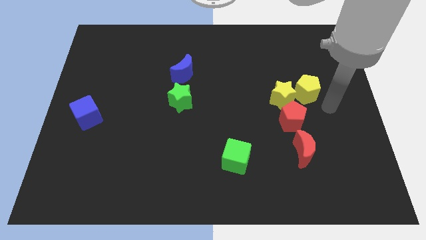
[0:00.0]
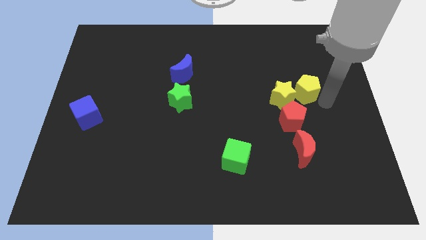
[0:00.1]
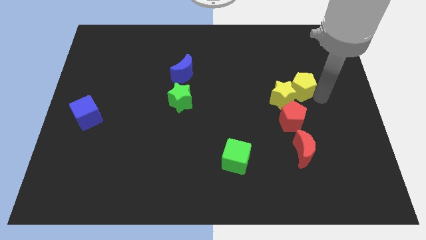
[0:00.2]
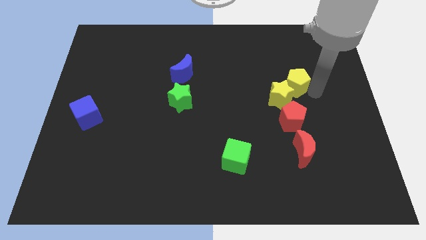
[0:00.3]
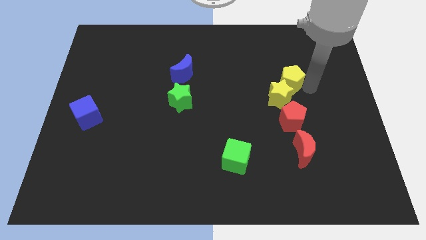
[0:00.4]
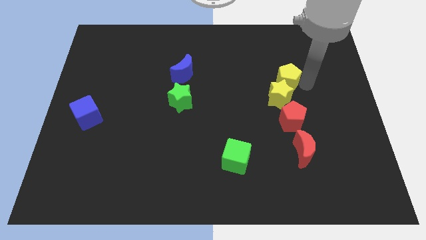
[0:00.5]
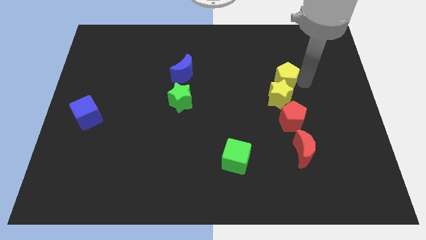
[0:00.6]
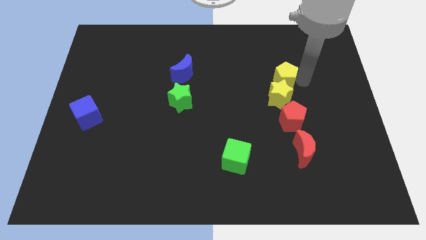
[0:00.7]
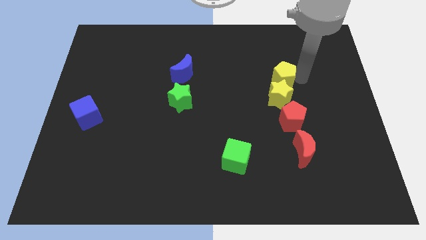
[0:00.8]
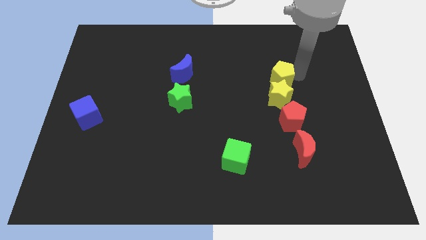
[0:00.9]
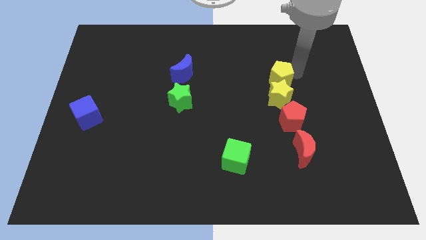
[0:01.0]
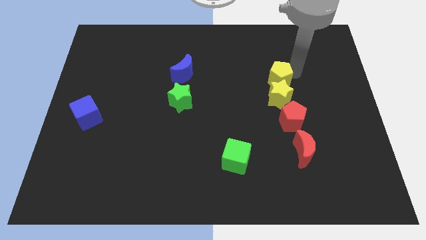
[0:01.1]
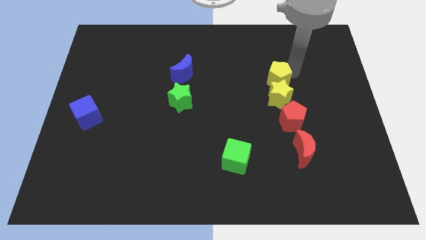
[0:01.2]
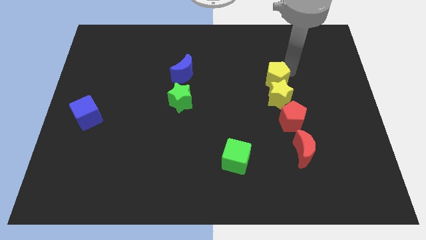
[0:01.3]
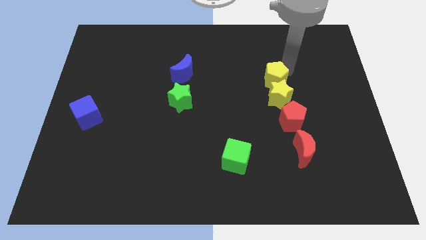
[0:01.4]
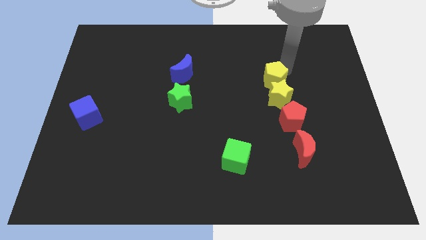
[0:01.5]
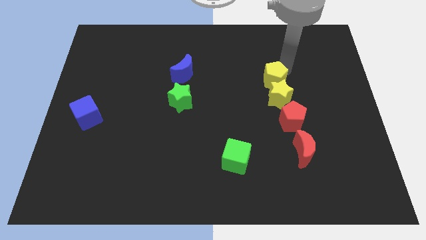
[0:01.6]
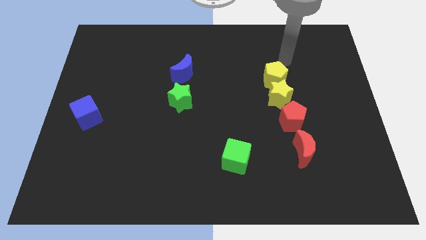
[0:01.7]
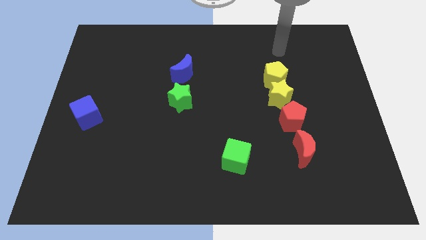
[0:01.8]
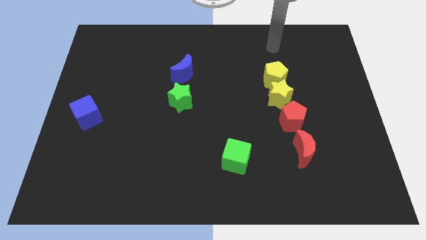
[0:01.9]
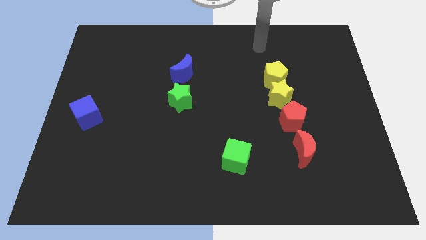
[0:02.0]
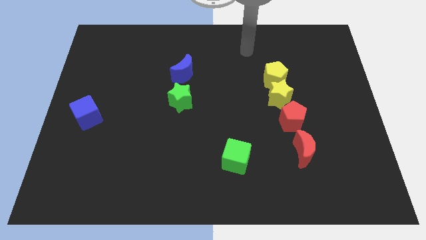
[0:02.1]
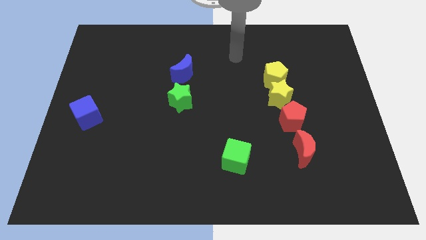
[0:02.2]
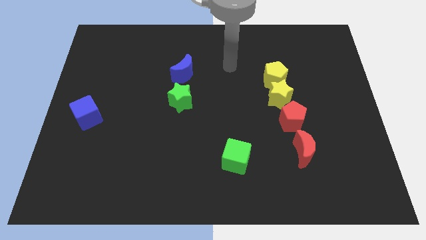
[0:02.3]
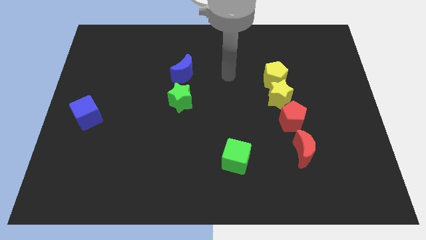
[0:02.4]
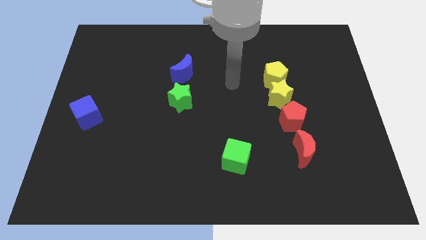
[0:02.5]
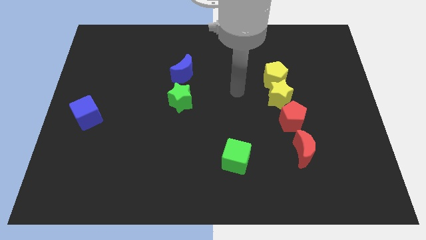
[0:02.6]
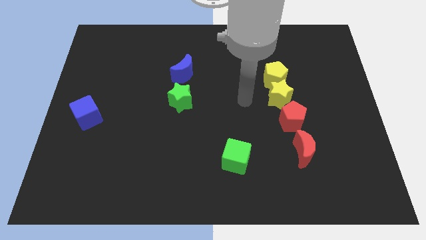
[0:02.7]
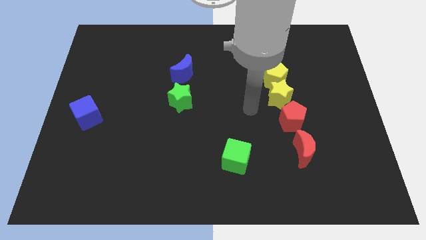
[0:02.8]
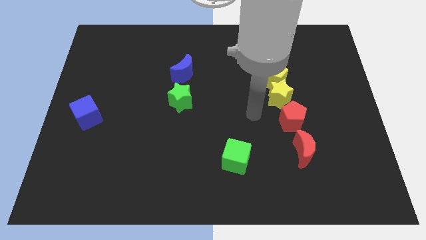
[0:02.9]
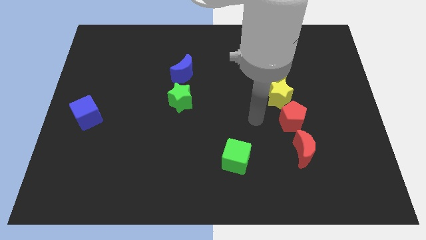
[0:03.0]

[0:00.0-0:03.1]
put the yellow pentagon at the top of the yellow star

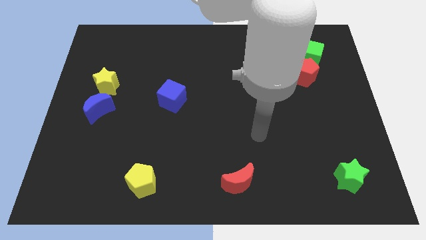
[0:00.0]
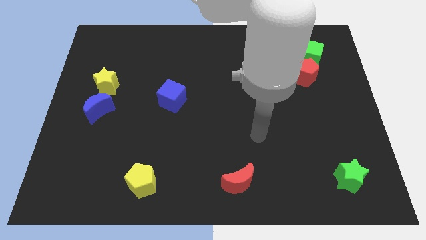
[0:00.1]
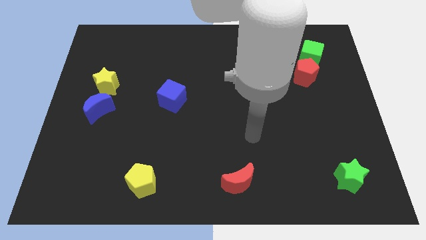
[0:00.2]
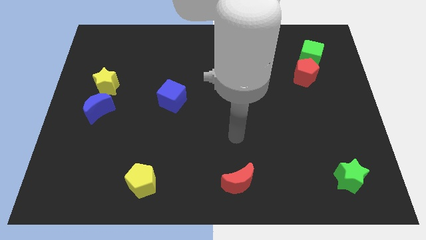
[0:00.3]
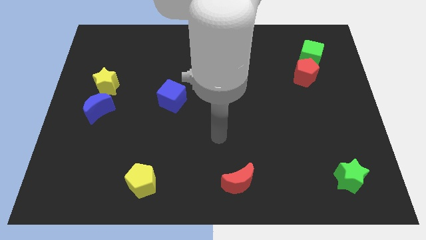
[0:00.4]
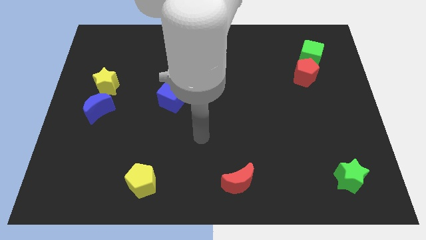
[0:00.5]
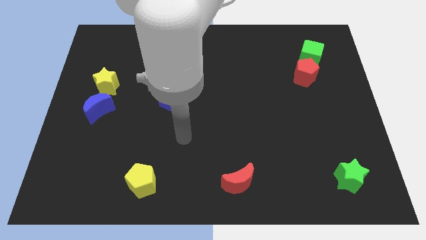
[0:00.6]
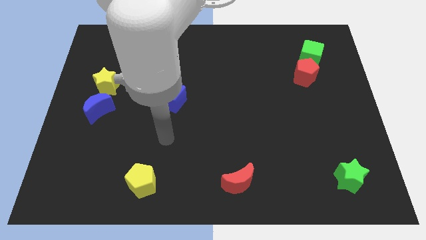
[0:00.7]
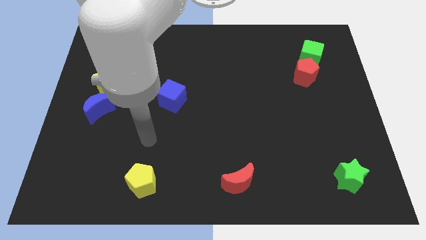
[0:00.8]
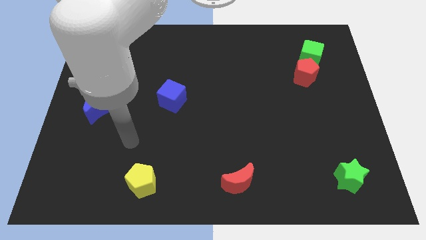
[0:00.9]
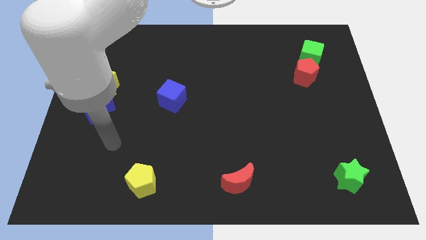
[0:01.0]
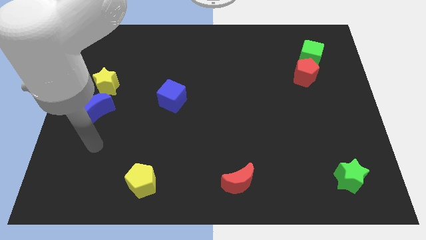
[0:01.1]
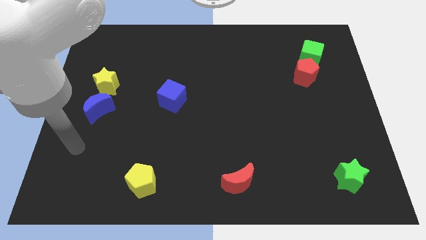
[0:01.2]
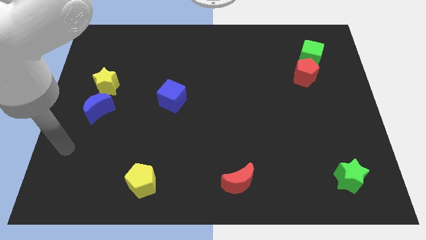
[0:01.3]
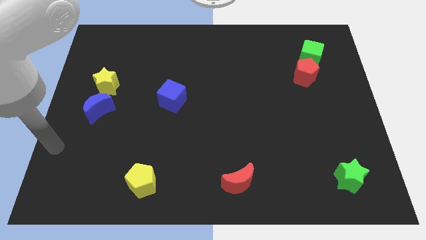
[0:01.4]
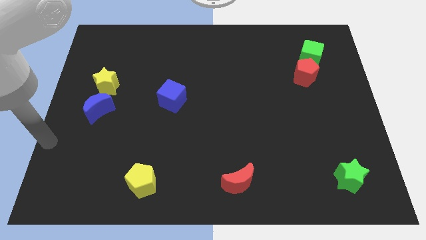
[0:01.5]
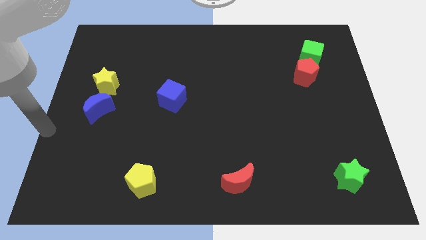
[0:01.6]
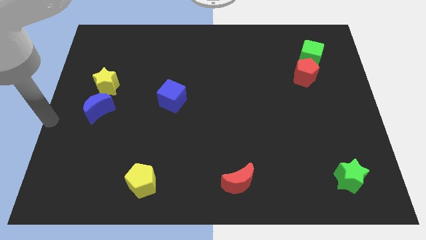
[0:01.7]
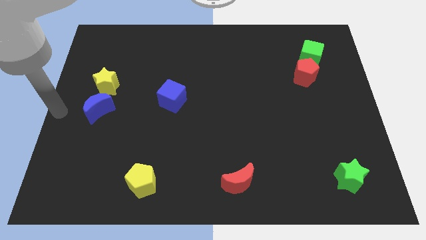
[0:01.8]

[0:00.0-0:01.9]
go and point your arm at the center left of the board

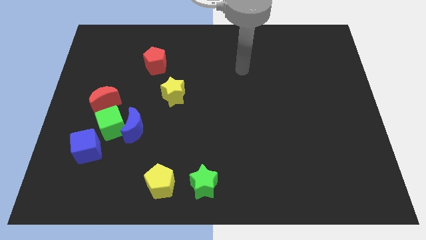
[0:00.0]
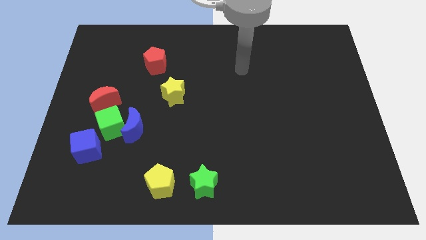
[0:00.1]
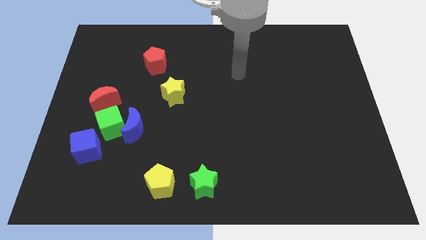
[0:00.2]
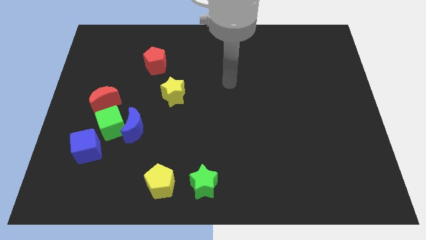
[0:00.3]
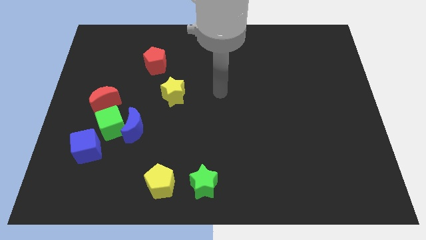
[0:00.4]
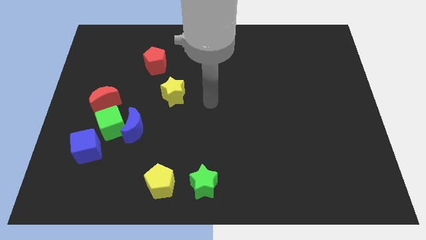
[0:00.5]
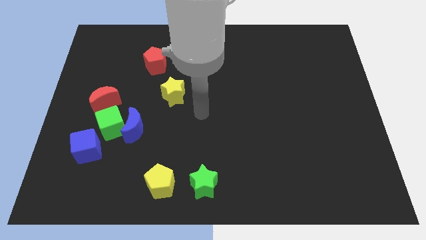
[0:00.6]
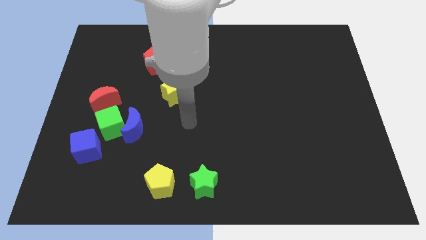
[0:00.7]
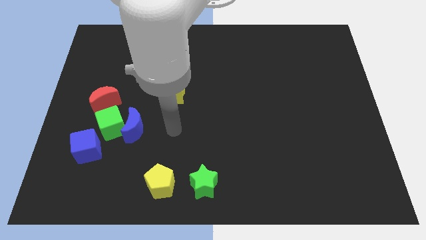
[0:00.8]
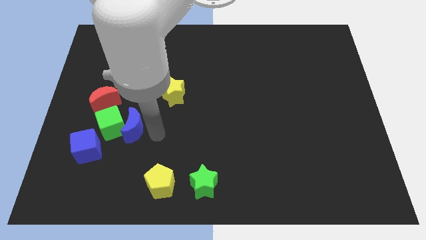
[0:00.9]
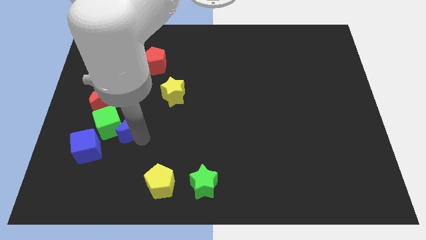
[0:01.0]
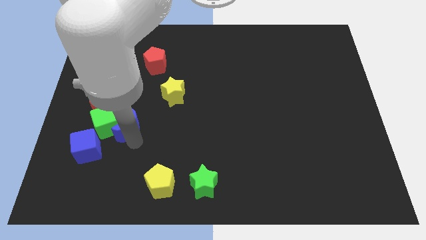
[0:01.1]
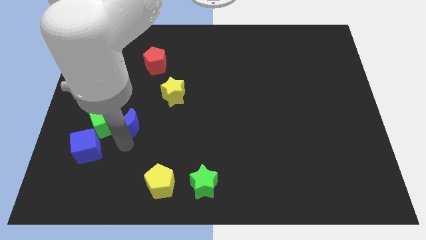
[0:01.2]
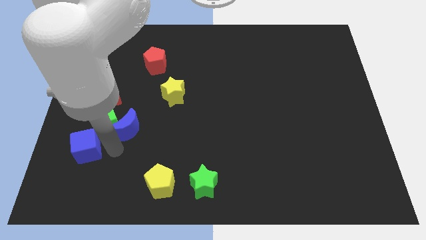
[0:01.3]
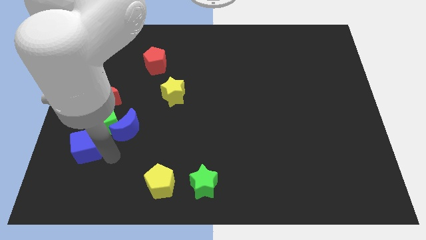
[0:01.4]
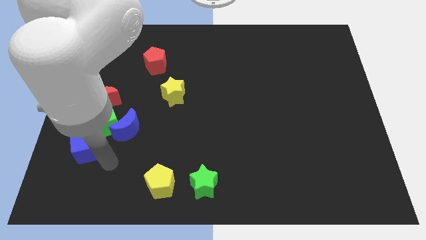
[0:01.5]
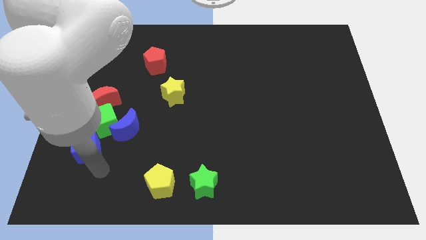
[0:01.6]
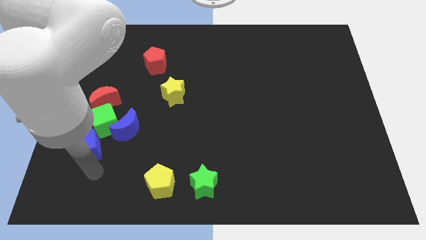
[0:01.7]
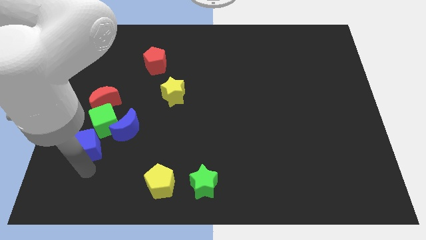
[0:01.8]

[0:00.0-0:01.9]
move your arm towards the blue cube

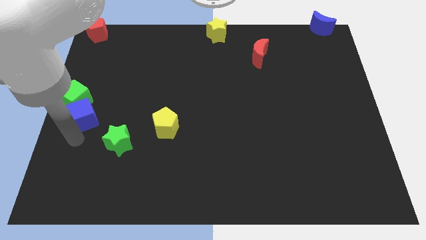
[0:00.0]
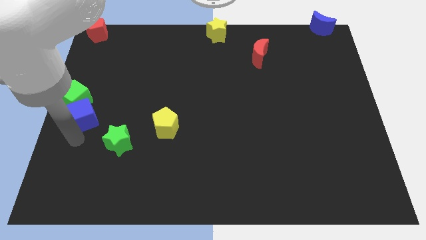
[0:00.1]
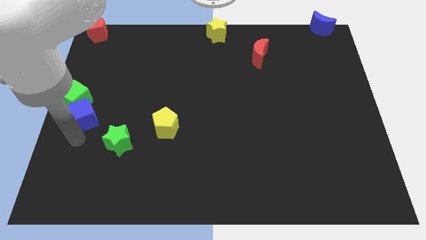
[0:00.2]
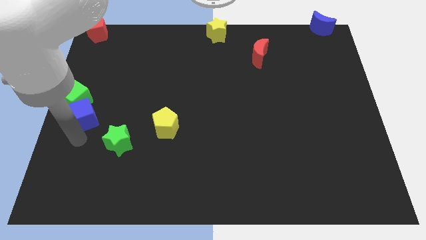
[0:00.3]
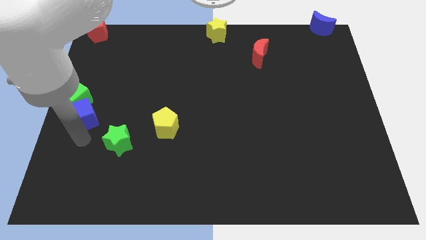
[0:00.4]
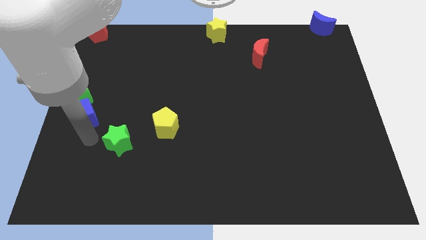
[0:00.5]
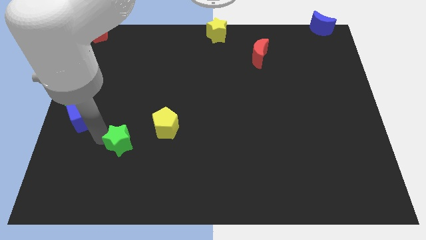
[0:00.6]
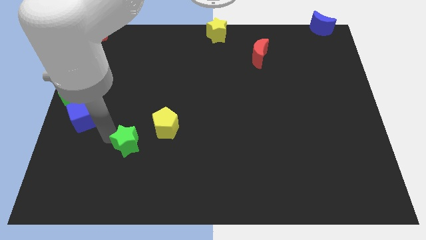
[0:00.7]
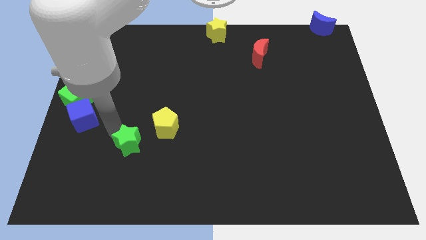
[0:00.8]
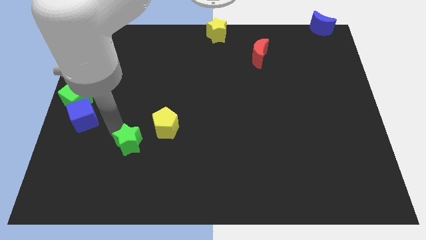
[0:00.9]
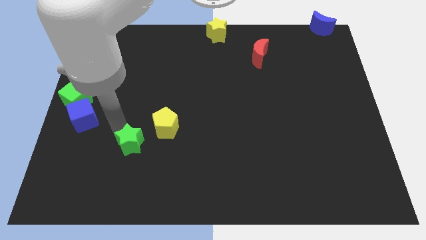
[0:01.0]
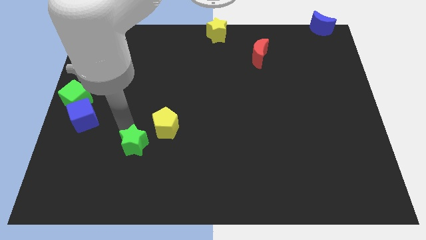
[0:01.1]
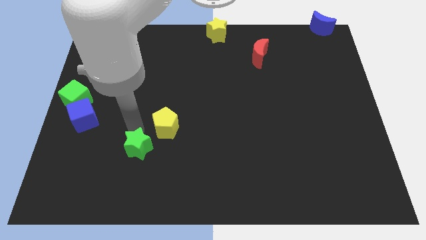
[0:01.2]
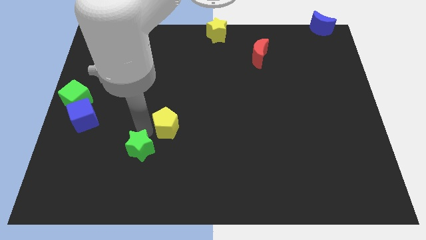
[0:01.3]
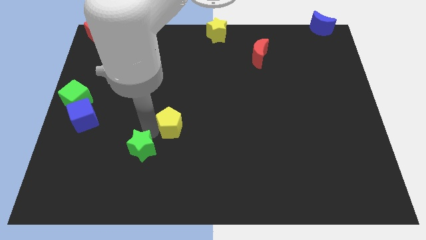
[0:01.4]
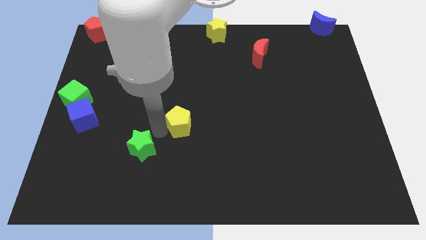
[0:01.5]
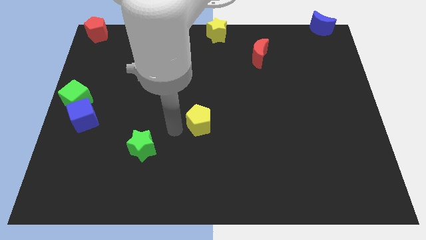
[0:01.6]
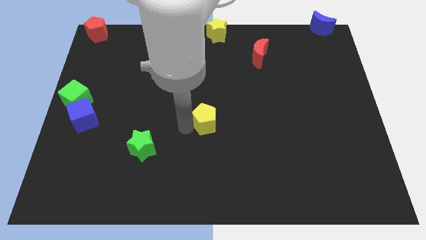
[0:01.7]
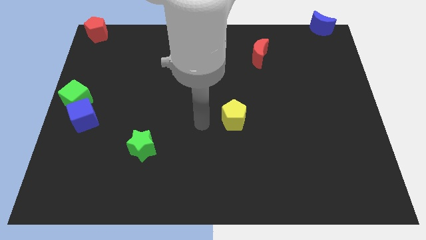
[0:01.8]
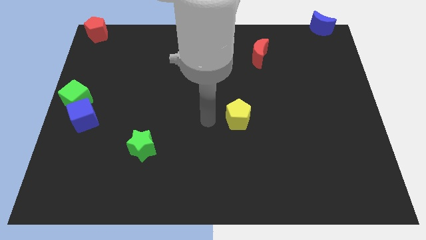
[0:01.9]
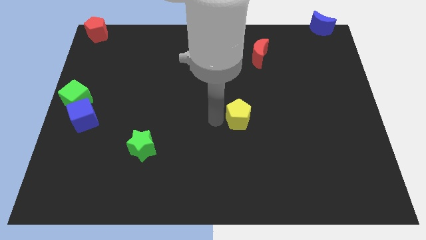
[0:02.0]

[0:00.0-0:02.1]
drag the yellow pentagon to the center right side of the board
